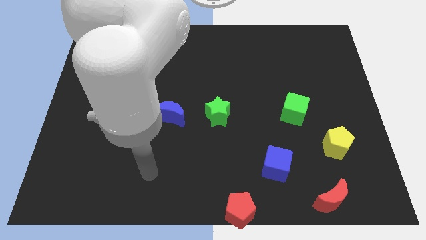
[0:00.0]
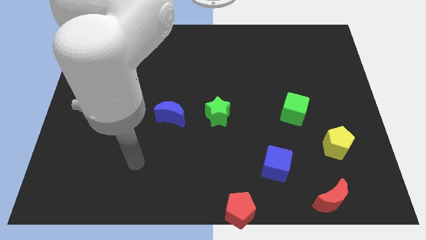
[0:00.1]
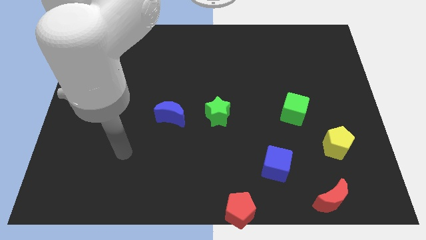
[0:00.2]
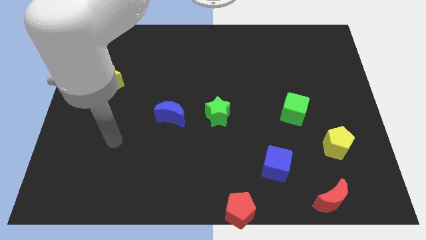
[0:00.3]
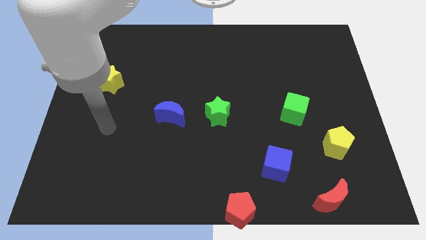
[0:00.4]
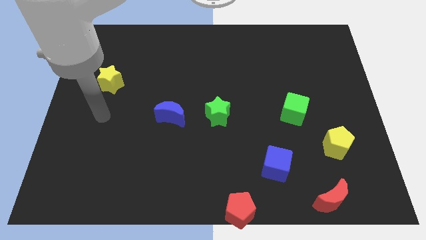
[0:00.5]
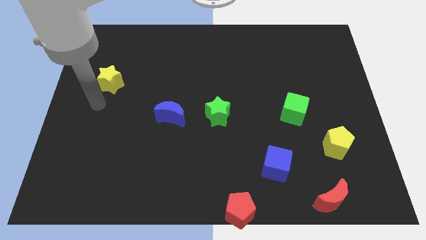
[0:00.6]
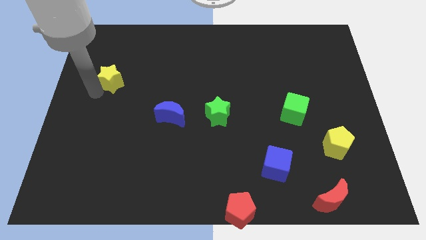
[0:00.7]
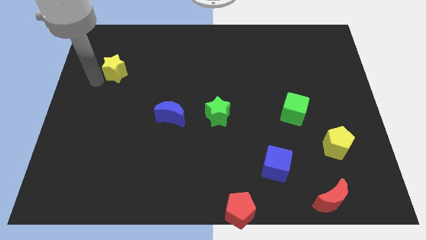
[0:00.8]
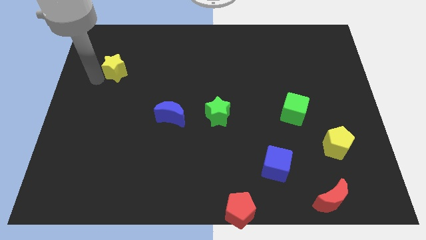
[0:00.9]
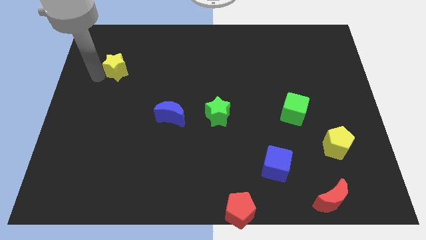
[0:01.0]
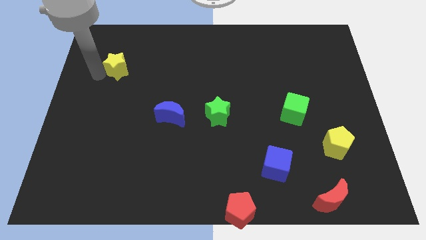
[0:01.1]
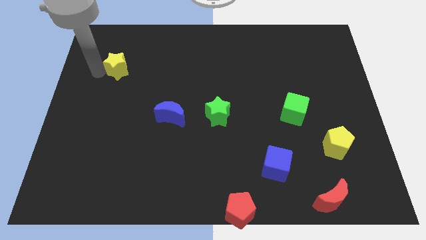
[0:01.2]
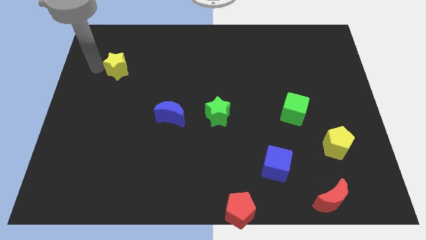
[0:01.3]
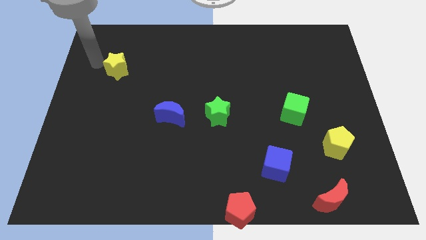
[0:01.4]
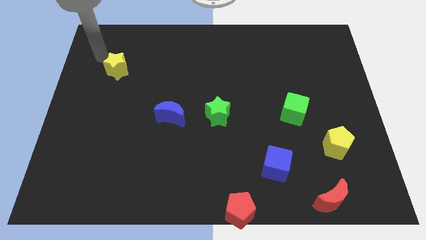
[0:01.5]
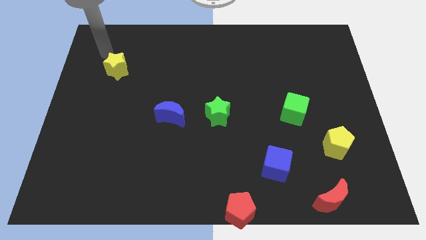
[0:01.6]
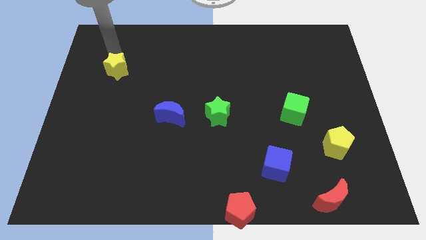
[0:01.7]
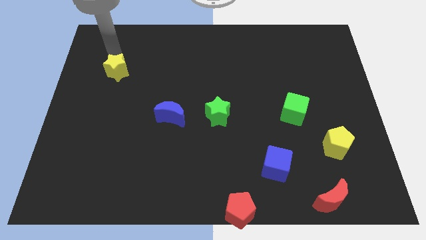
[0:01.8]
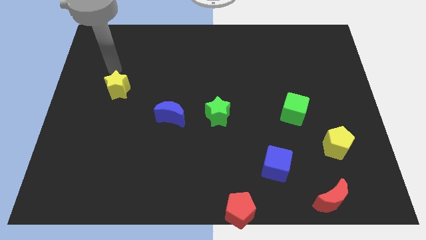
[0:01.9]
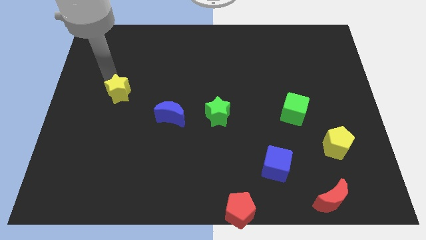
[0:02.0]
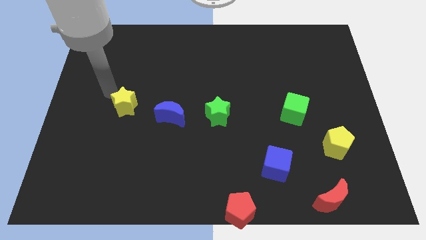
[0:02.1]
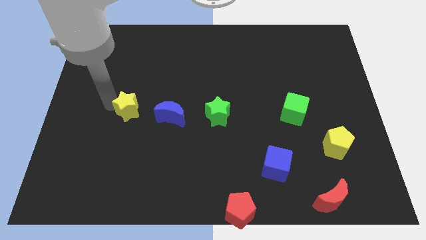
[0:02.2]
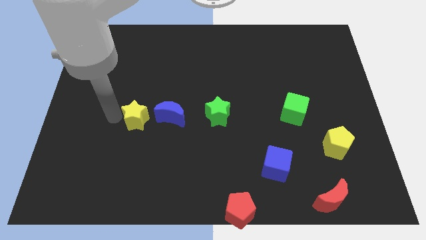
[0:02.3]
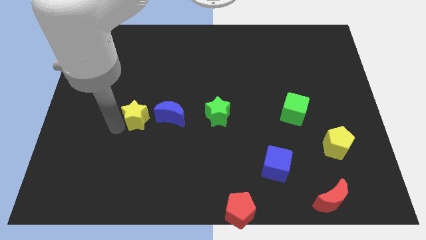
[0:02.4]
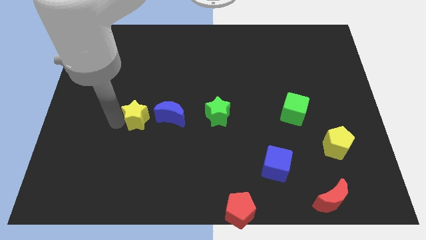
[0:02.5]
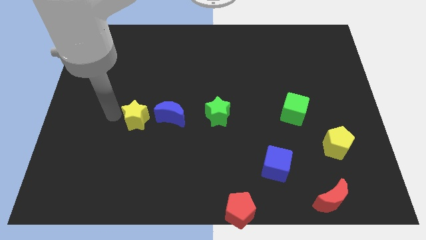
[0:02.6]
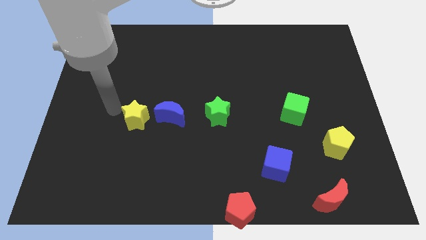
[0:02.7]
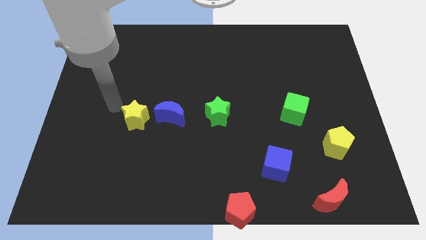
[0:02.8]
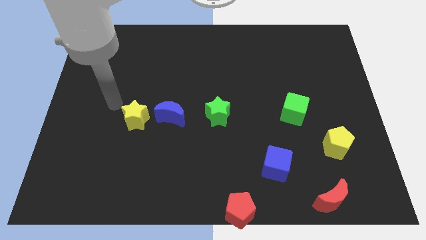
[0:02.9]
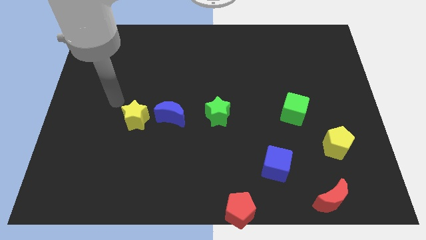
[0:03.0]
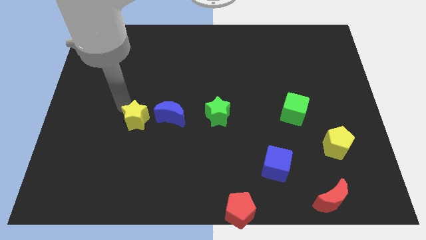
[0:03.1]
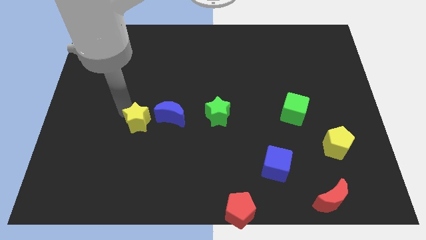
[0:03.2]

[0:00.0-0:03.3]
move the yellow star left to the blue crescent

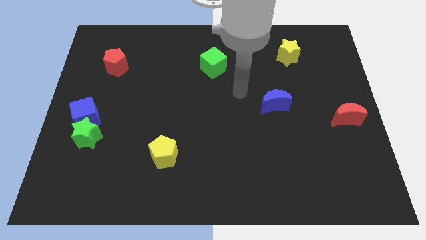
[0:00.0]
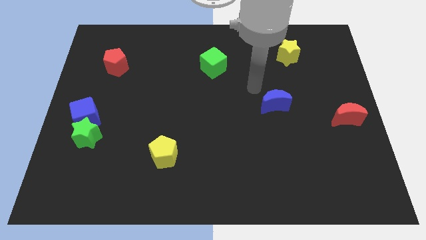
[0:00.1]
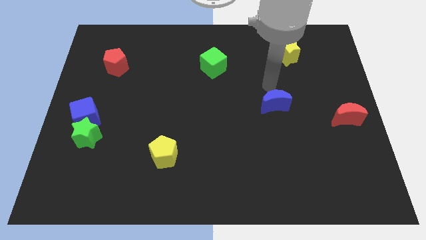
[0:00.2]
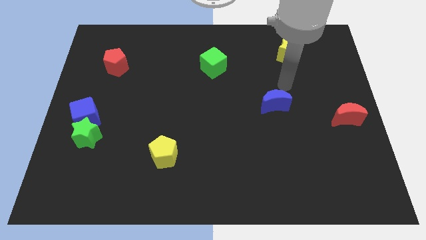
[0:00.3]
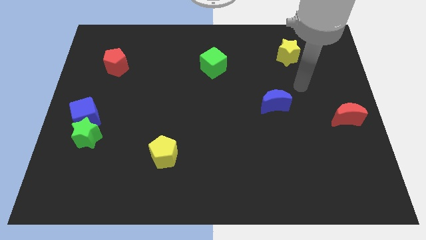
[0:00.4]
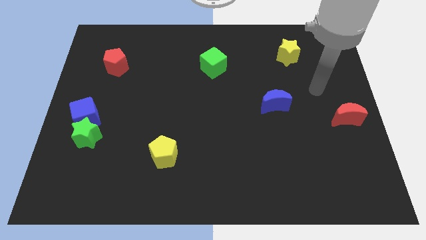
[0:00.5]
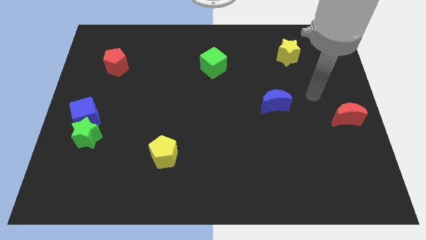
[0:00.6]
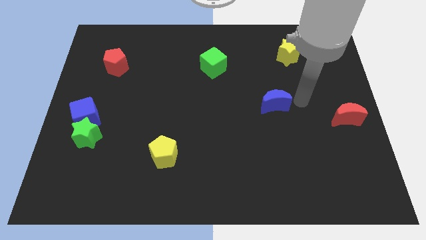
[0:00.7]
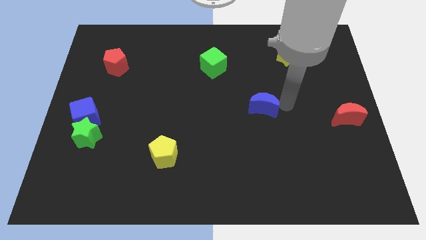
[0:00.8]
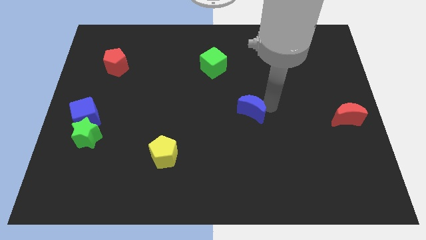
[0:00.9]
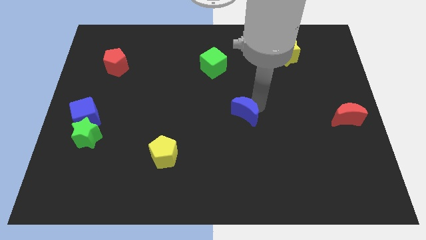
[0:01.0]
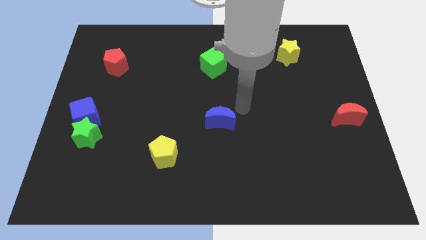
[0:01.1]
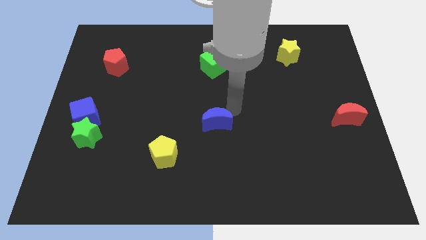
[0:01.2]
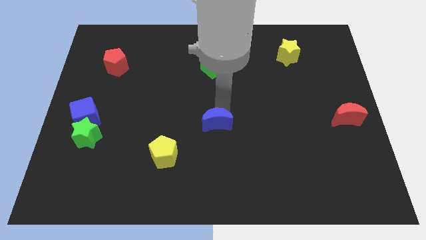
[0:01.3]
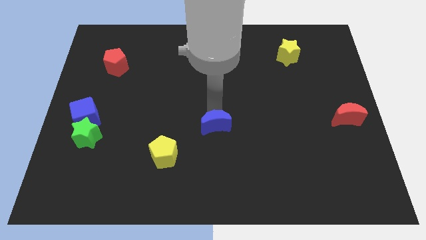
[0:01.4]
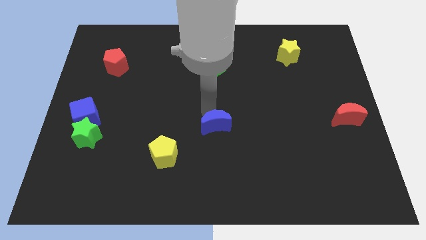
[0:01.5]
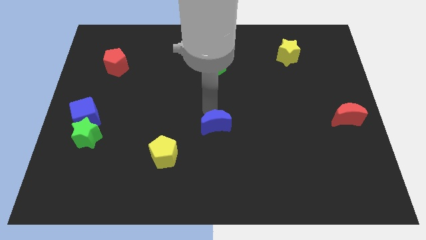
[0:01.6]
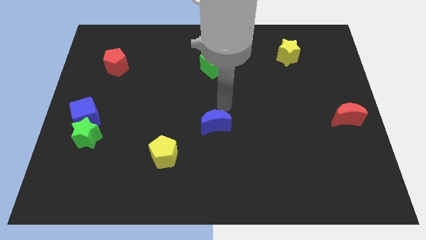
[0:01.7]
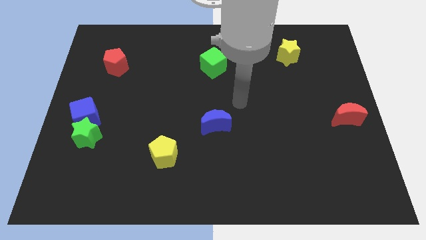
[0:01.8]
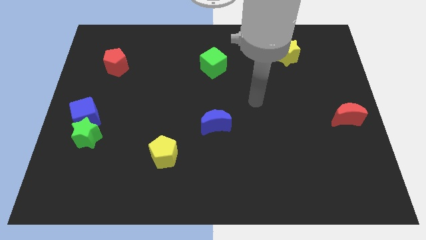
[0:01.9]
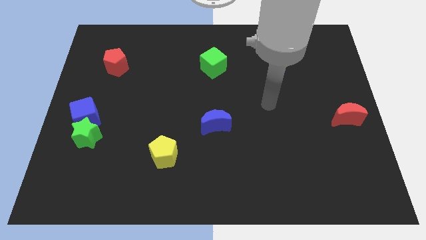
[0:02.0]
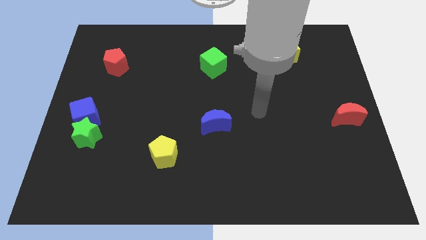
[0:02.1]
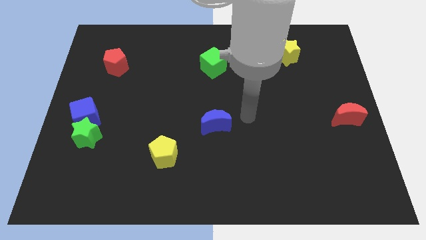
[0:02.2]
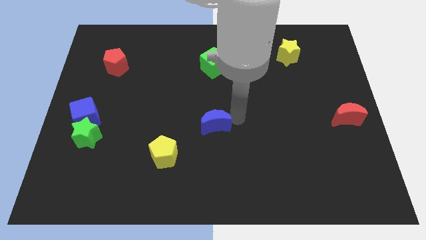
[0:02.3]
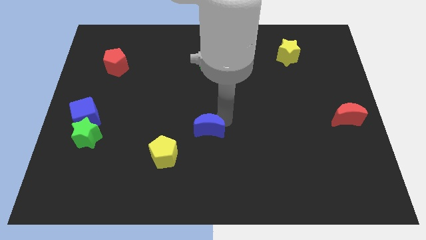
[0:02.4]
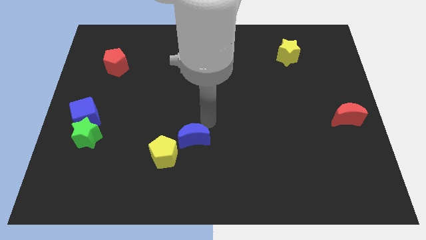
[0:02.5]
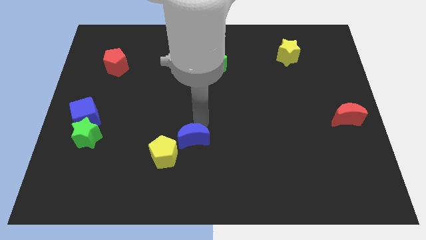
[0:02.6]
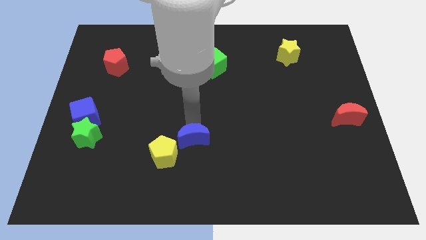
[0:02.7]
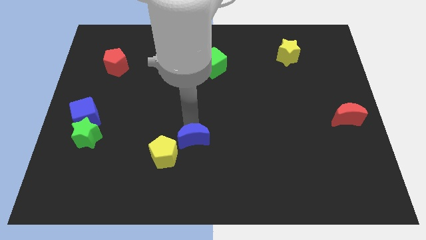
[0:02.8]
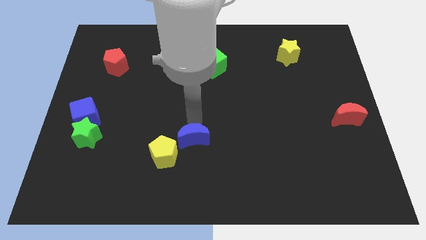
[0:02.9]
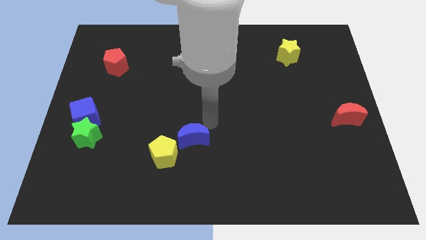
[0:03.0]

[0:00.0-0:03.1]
slide the blue moon to the top right of the yellow pentagon

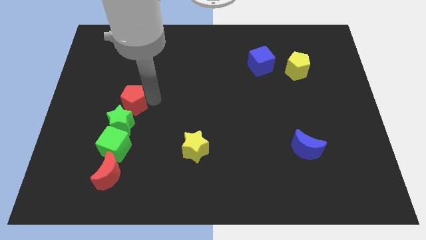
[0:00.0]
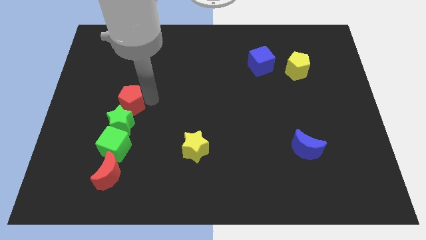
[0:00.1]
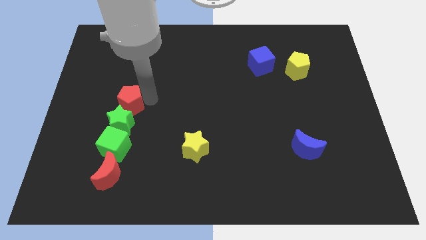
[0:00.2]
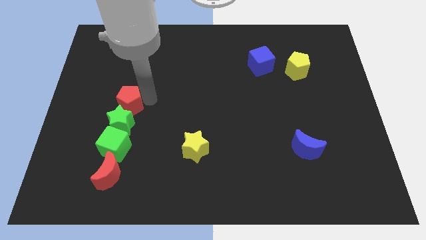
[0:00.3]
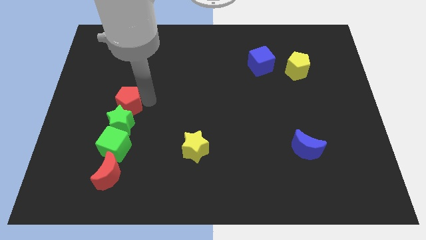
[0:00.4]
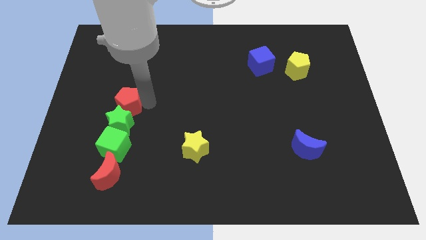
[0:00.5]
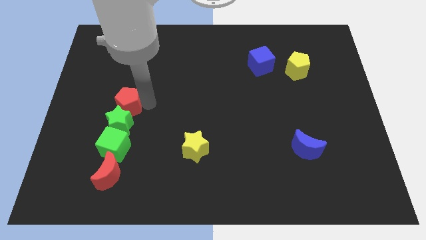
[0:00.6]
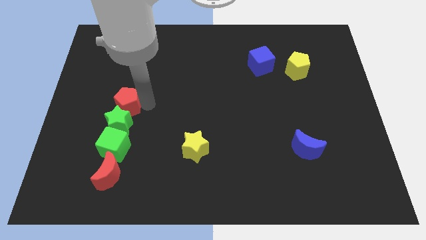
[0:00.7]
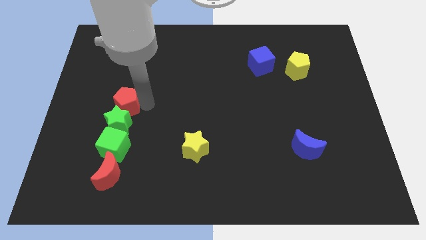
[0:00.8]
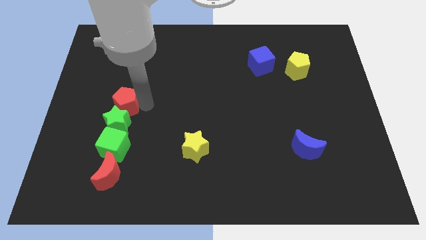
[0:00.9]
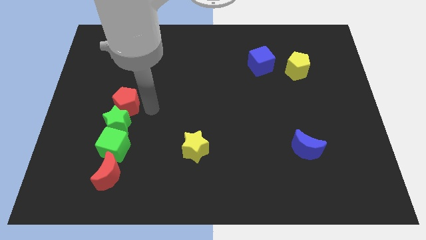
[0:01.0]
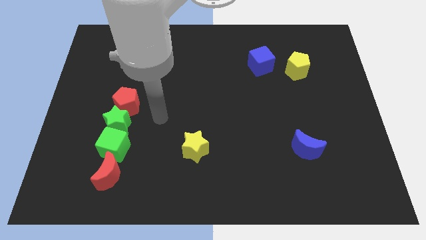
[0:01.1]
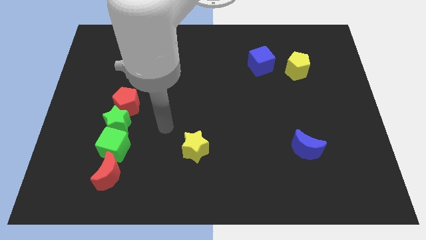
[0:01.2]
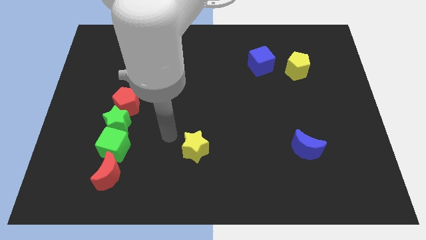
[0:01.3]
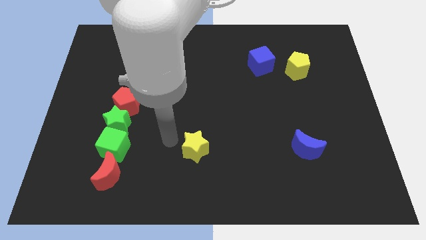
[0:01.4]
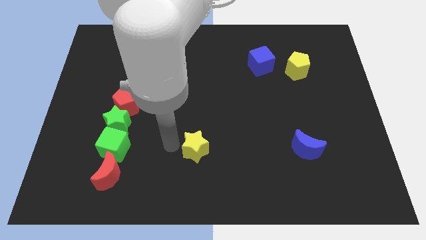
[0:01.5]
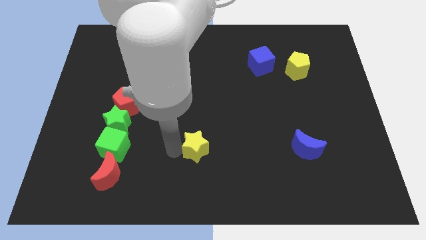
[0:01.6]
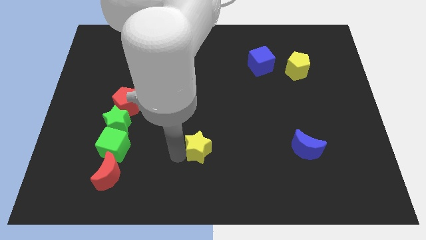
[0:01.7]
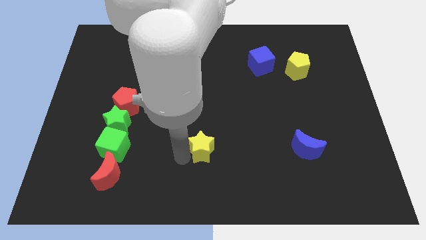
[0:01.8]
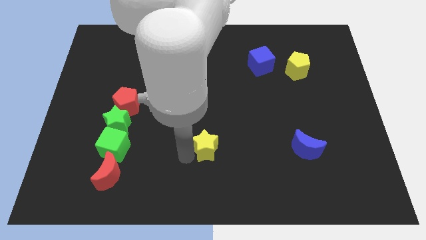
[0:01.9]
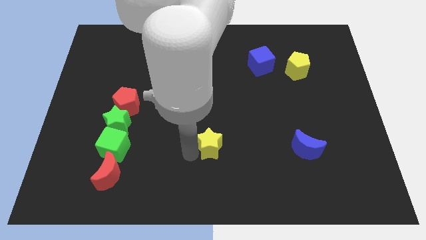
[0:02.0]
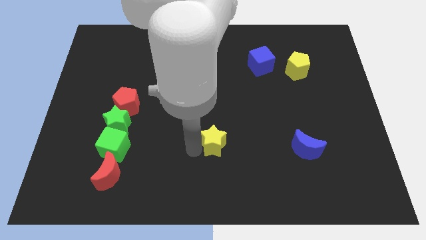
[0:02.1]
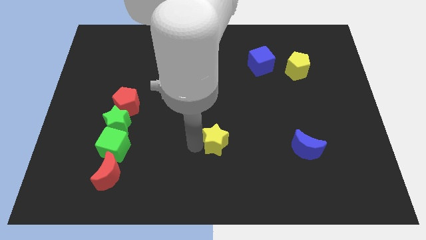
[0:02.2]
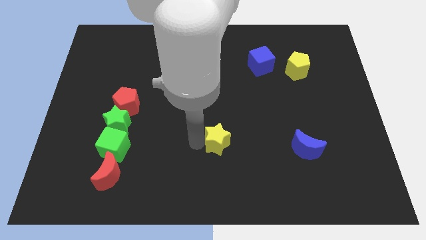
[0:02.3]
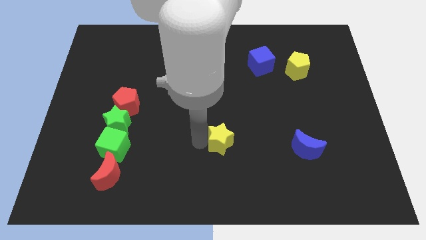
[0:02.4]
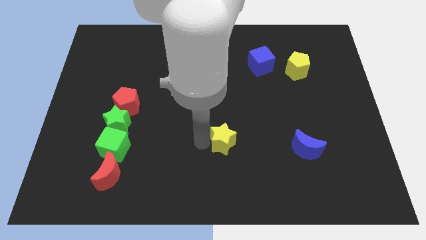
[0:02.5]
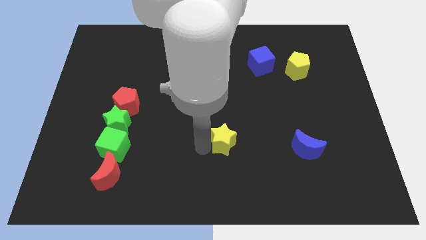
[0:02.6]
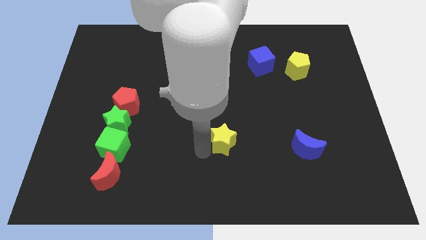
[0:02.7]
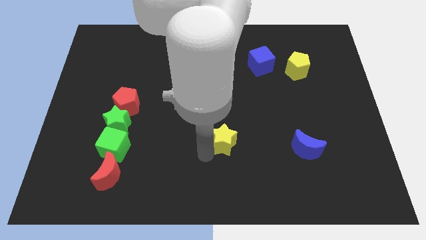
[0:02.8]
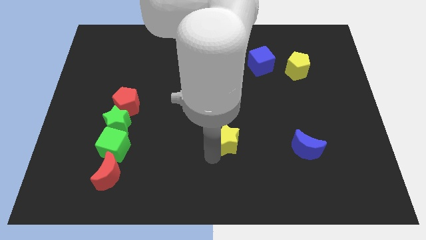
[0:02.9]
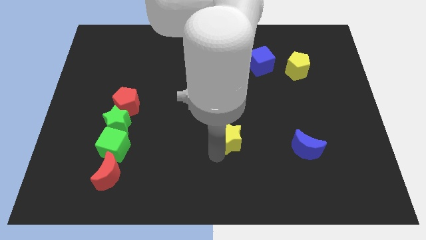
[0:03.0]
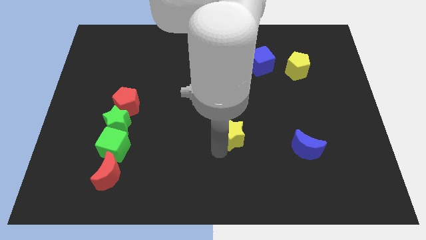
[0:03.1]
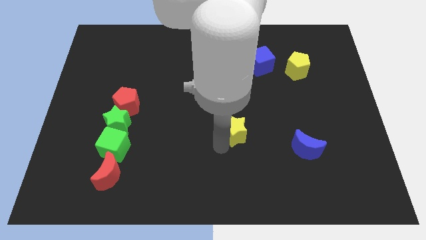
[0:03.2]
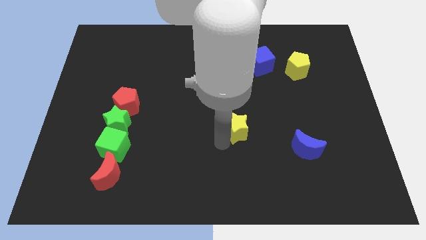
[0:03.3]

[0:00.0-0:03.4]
move the yellow star to the bottom left side of the blue crescent
